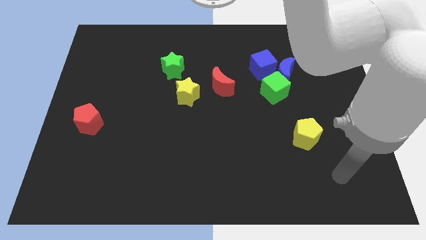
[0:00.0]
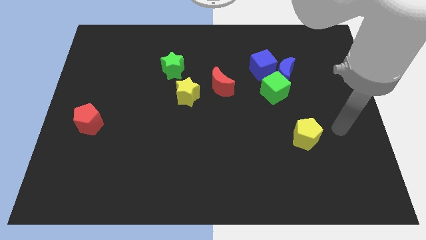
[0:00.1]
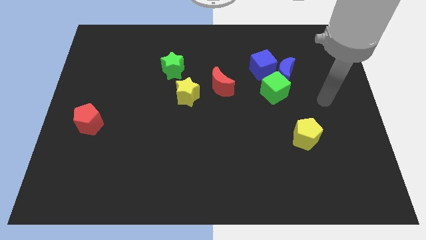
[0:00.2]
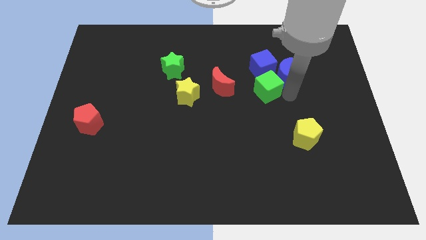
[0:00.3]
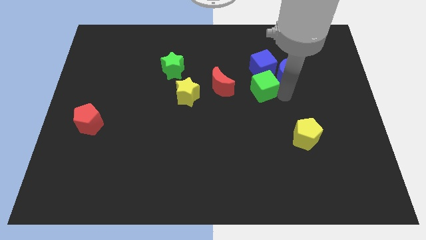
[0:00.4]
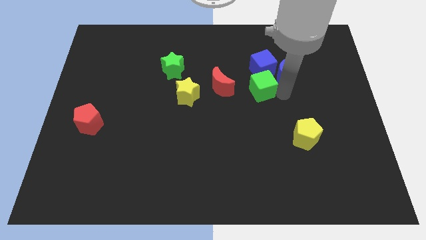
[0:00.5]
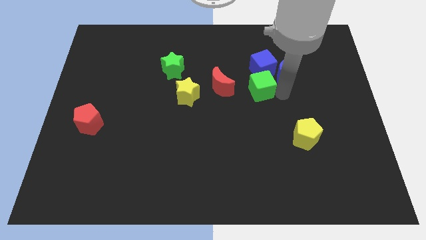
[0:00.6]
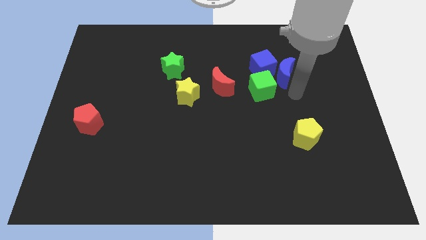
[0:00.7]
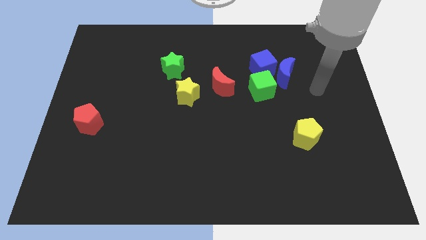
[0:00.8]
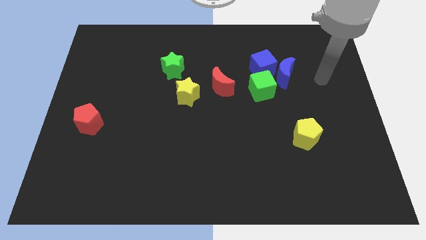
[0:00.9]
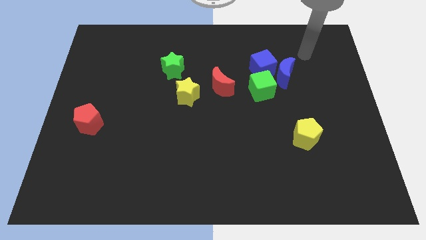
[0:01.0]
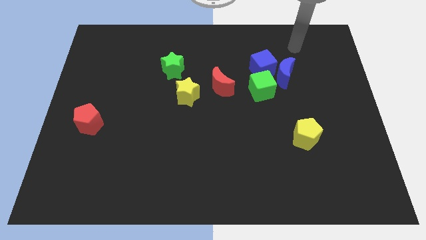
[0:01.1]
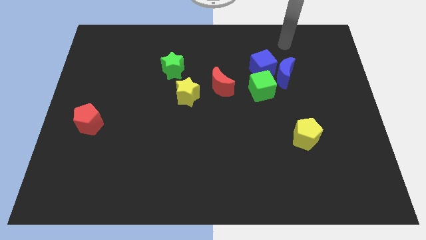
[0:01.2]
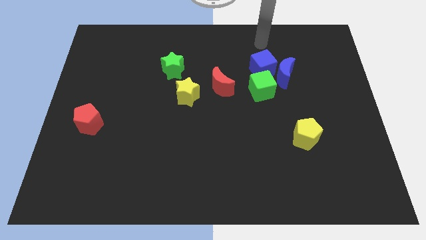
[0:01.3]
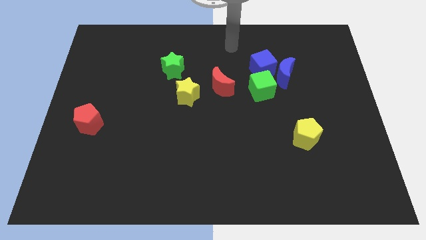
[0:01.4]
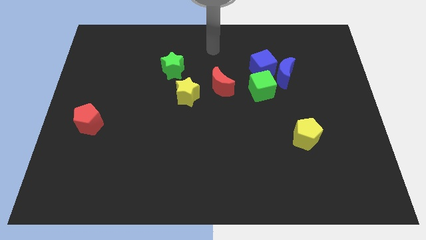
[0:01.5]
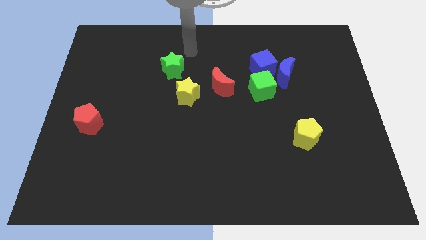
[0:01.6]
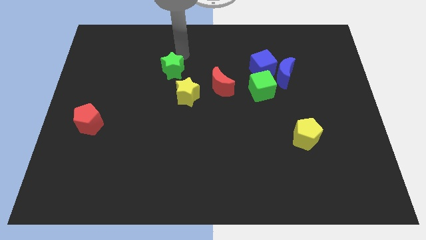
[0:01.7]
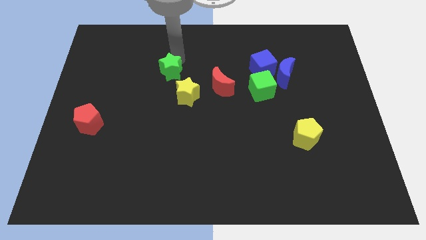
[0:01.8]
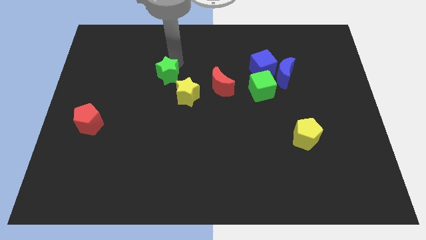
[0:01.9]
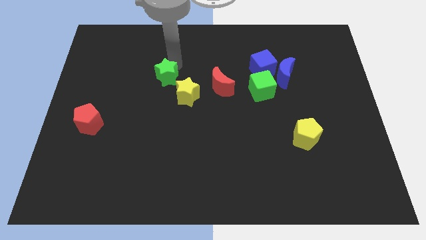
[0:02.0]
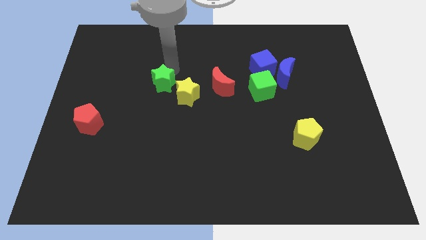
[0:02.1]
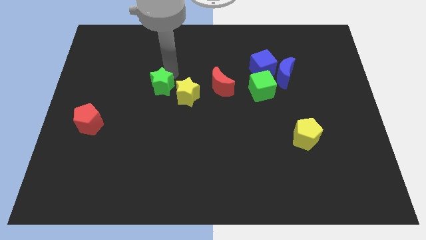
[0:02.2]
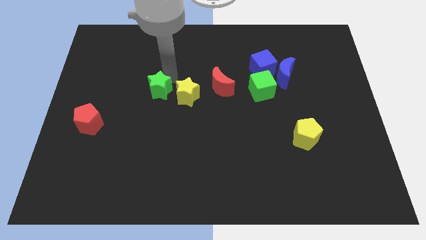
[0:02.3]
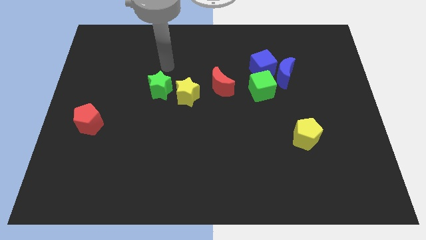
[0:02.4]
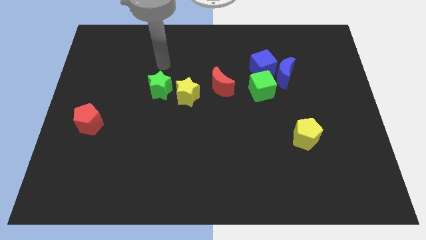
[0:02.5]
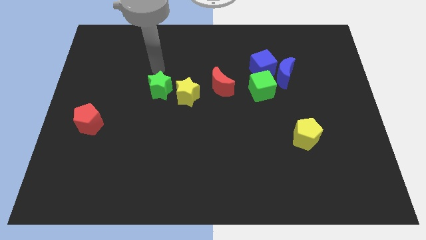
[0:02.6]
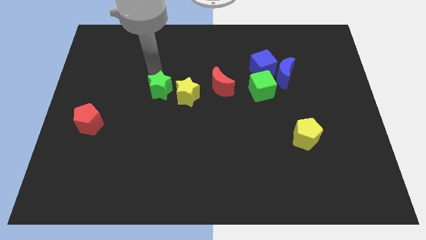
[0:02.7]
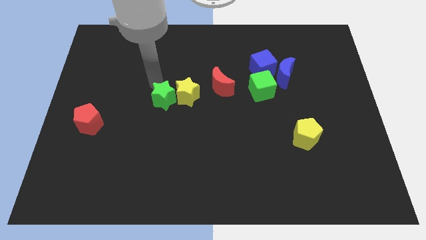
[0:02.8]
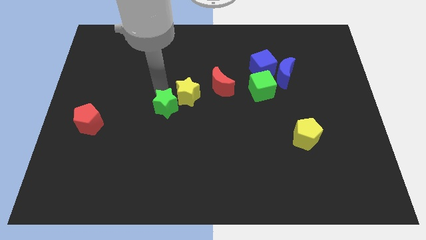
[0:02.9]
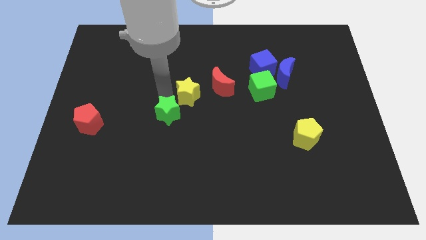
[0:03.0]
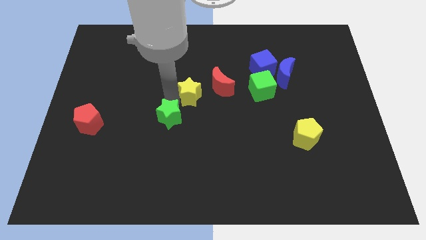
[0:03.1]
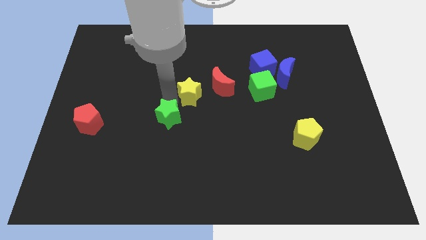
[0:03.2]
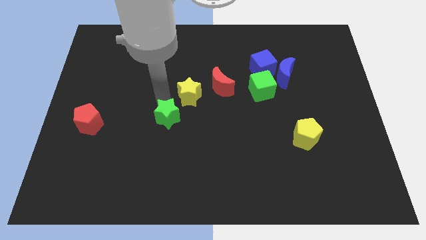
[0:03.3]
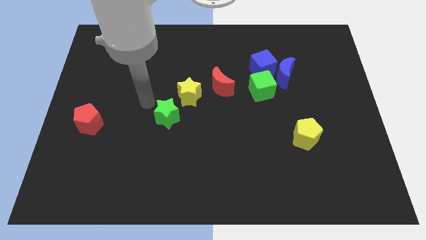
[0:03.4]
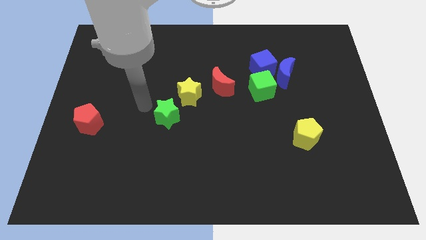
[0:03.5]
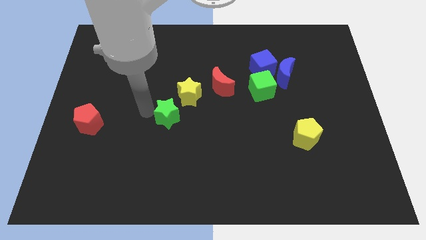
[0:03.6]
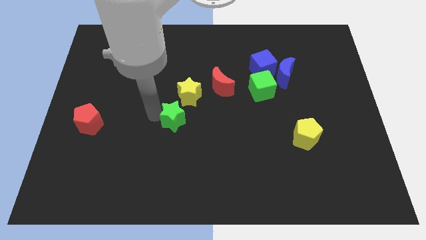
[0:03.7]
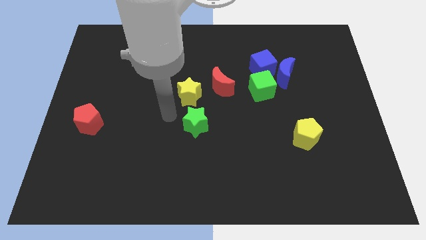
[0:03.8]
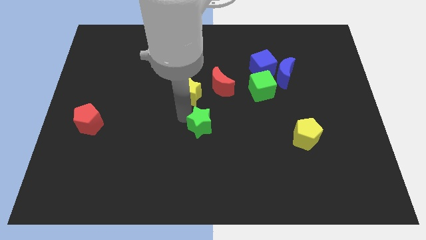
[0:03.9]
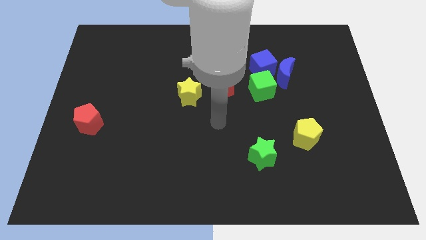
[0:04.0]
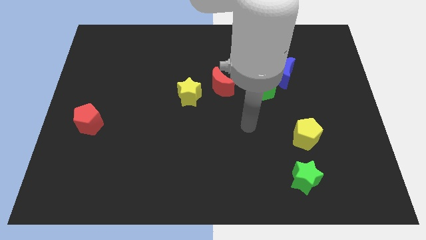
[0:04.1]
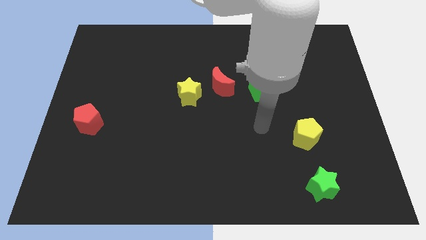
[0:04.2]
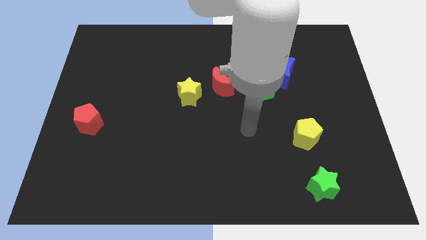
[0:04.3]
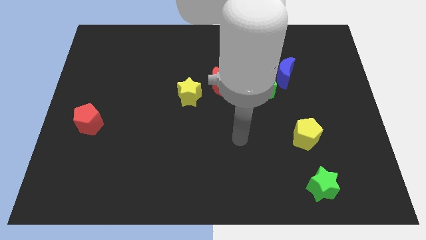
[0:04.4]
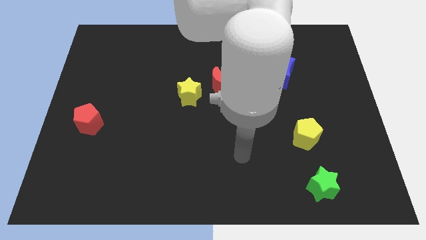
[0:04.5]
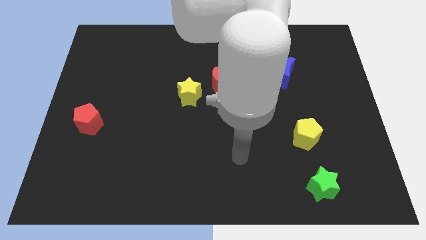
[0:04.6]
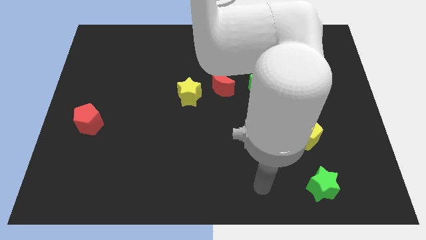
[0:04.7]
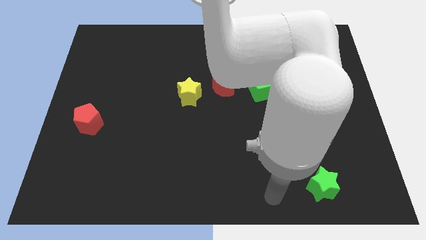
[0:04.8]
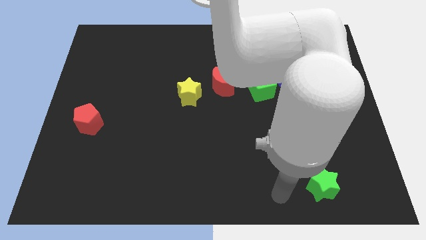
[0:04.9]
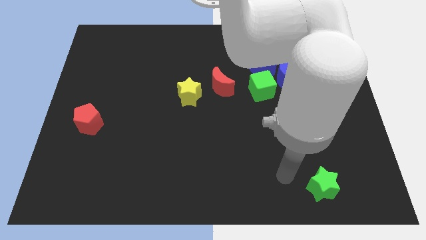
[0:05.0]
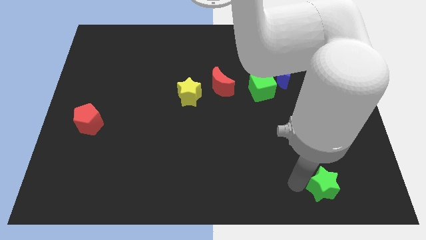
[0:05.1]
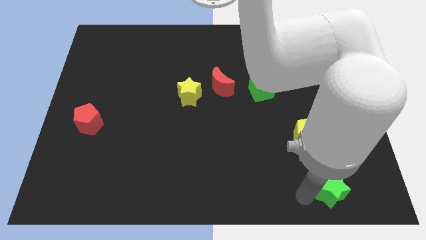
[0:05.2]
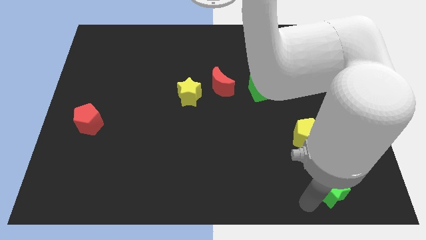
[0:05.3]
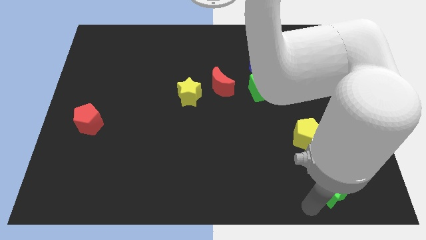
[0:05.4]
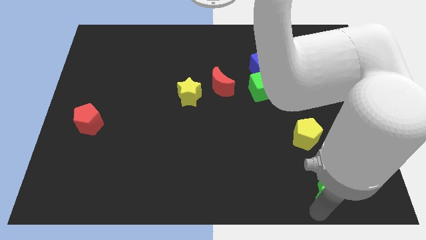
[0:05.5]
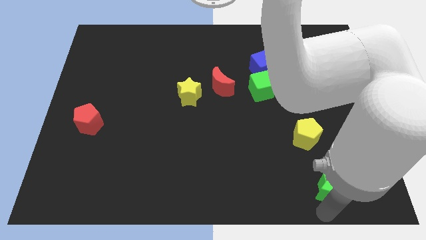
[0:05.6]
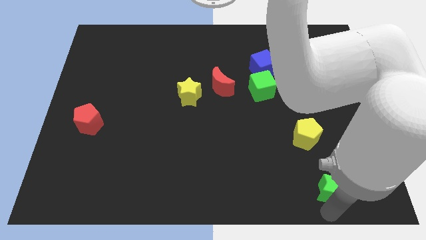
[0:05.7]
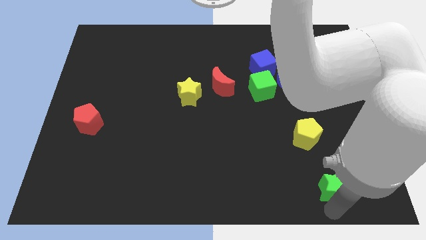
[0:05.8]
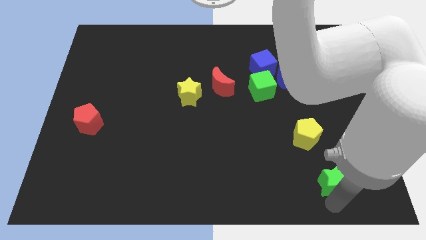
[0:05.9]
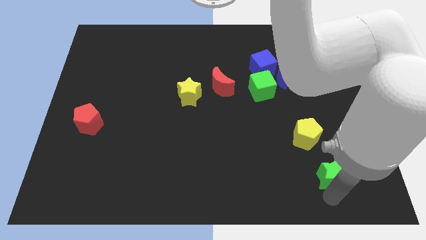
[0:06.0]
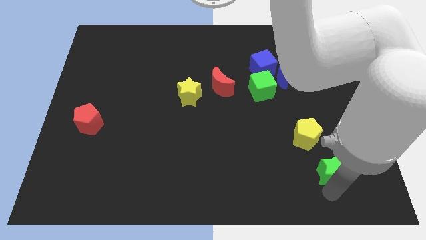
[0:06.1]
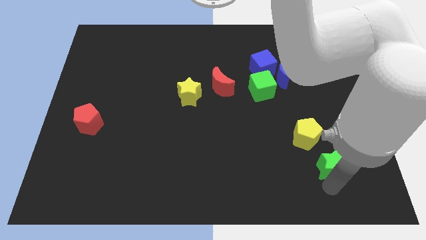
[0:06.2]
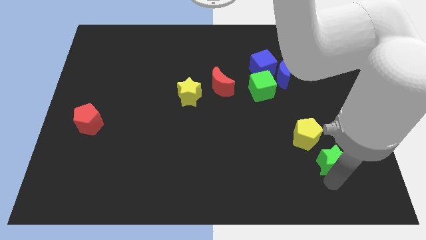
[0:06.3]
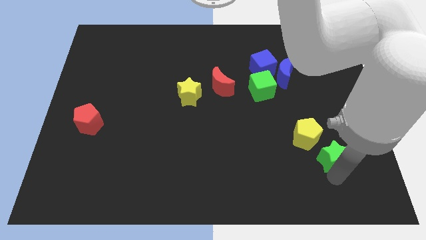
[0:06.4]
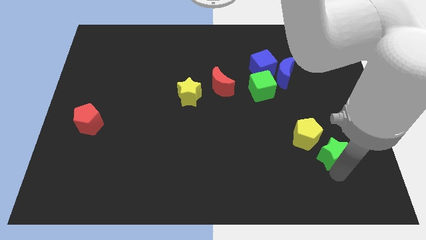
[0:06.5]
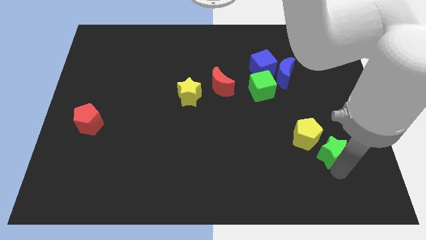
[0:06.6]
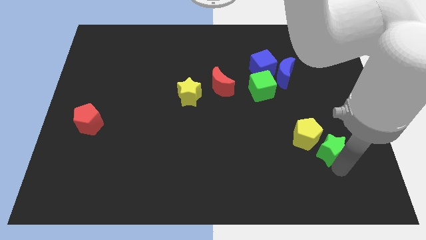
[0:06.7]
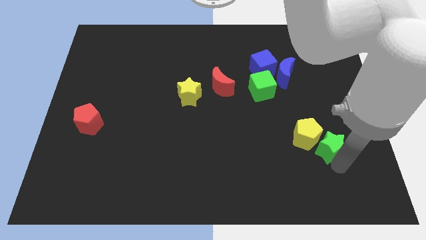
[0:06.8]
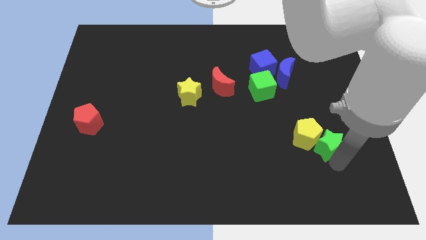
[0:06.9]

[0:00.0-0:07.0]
slide the green star towards the yellow pentagon

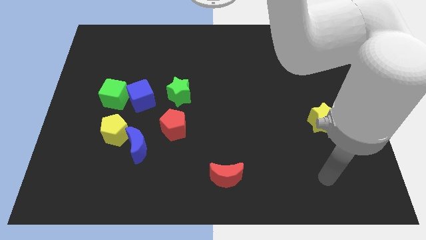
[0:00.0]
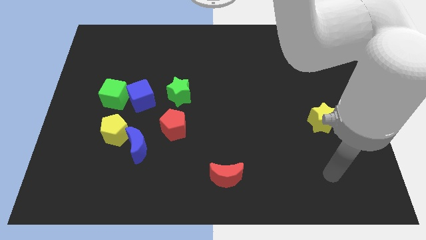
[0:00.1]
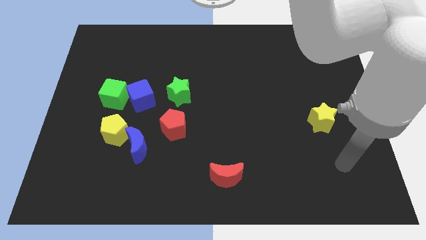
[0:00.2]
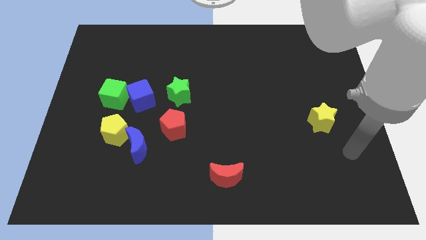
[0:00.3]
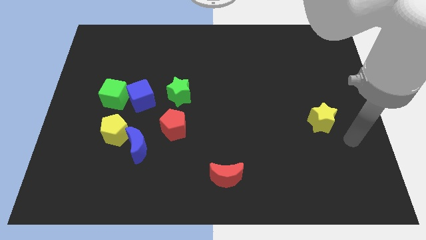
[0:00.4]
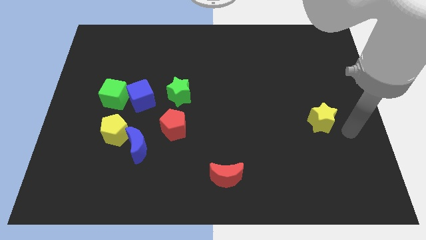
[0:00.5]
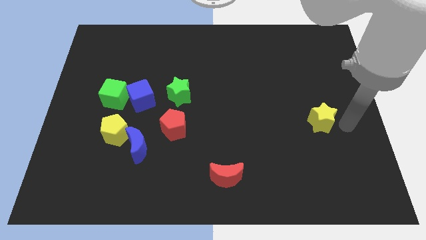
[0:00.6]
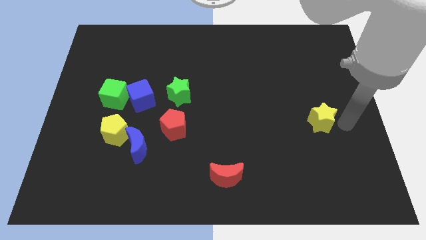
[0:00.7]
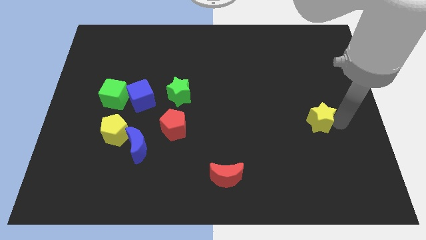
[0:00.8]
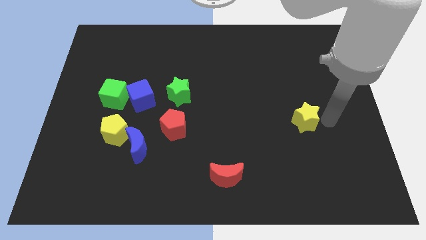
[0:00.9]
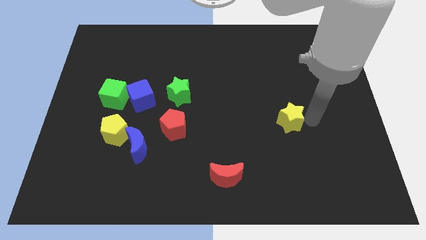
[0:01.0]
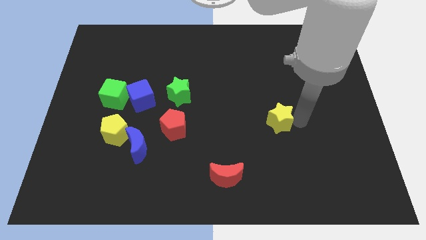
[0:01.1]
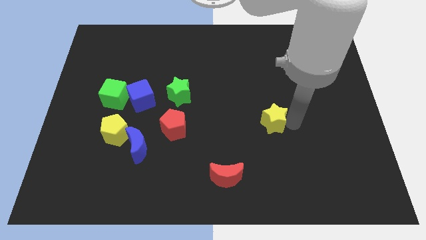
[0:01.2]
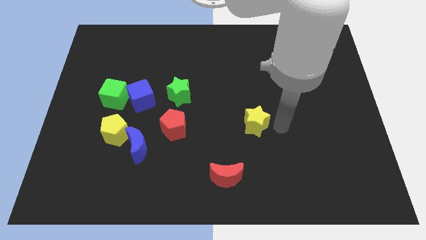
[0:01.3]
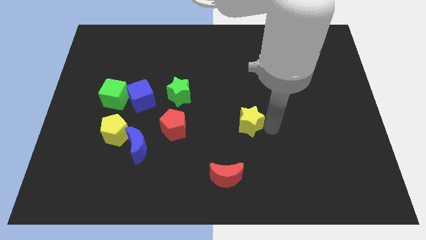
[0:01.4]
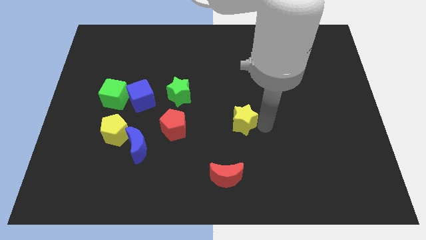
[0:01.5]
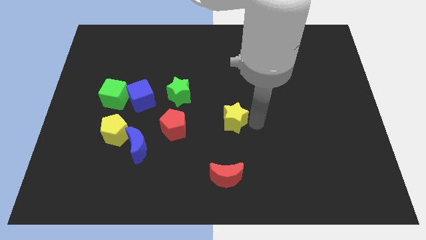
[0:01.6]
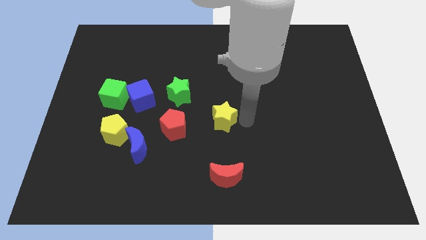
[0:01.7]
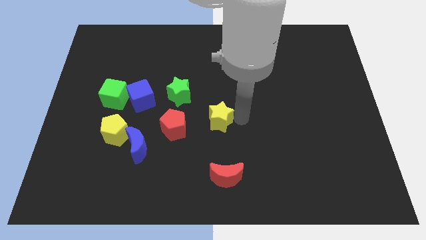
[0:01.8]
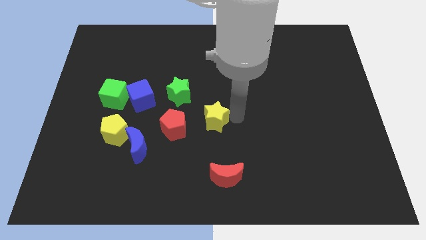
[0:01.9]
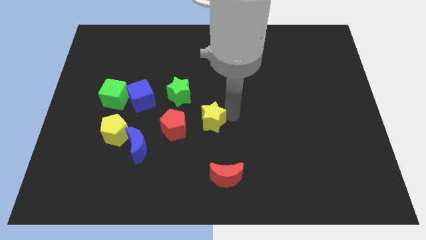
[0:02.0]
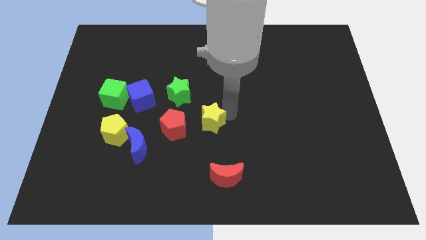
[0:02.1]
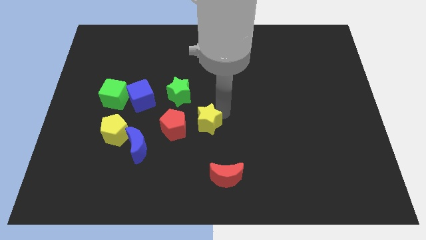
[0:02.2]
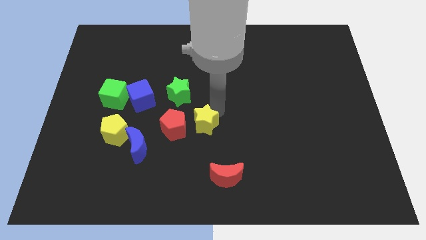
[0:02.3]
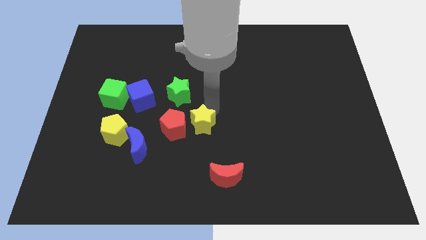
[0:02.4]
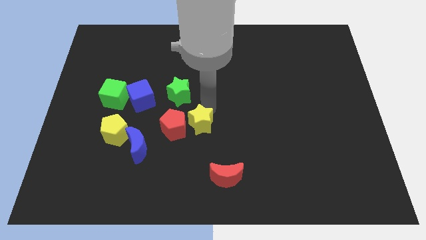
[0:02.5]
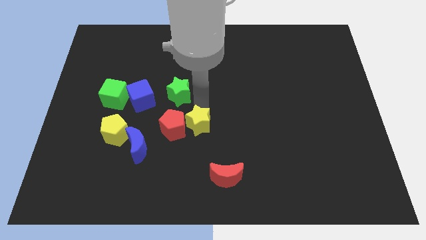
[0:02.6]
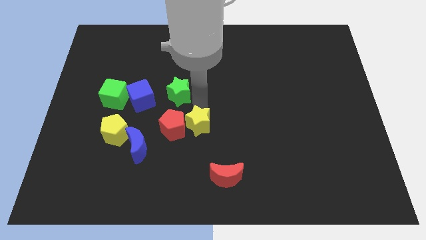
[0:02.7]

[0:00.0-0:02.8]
slide the yellow star towards the red pentagon
